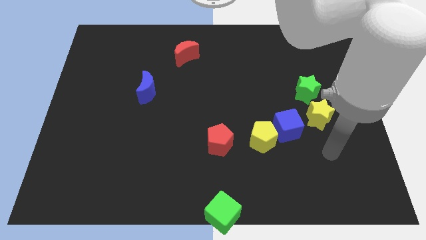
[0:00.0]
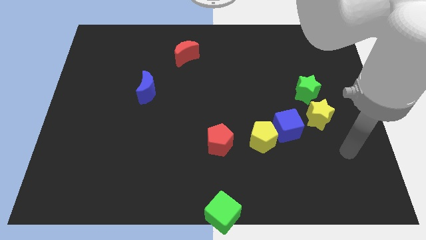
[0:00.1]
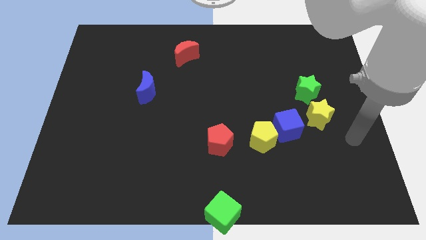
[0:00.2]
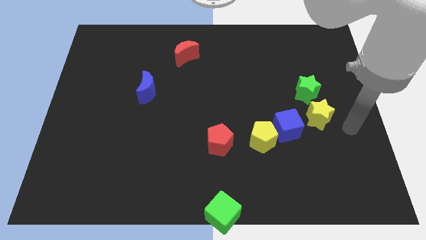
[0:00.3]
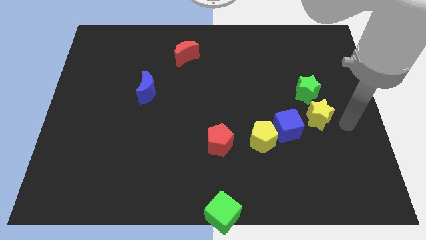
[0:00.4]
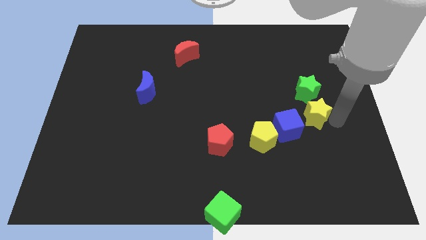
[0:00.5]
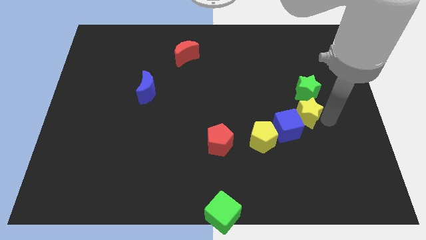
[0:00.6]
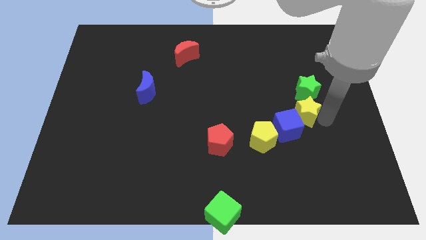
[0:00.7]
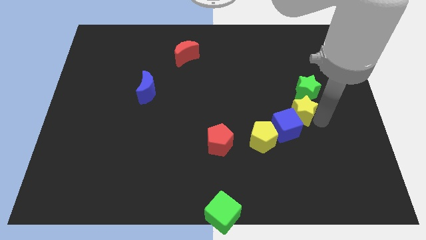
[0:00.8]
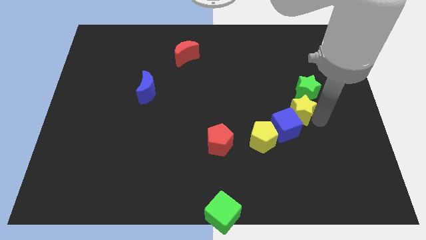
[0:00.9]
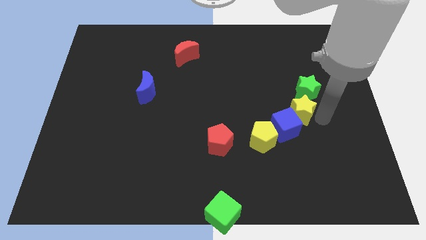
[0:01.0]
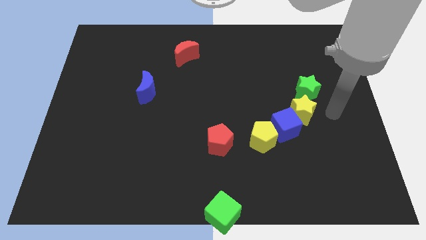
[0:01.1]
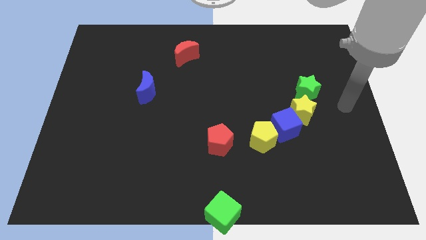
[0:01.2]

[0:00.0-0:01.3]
push the yellow star into the blue cube

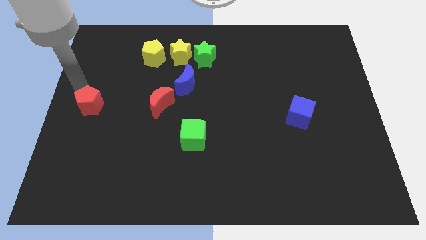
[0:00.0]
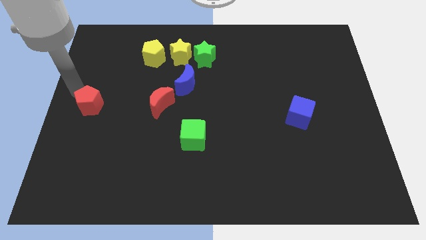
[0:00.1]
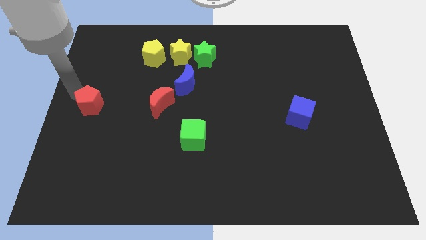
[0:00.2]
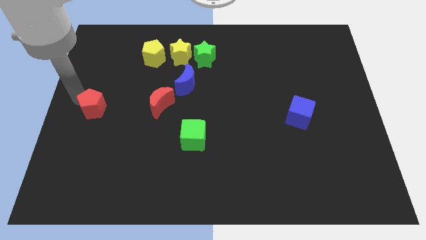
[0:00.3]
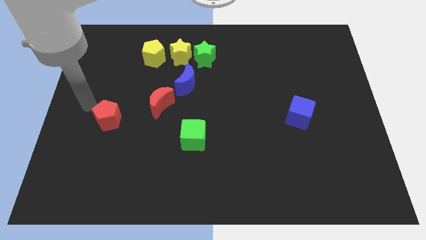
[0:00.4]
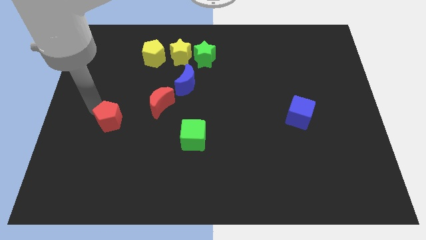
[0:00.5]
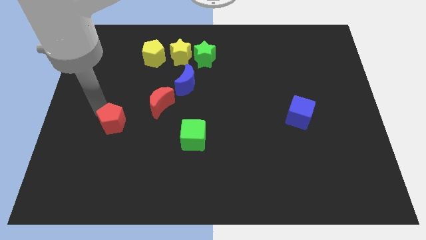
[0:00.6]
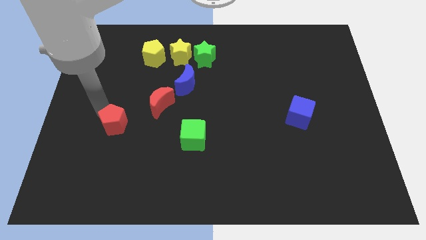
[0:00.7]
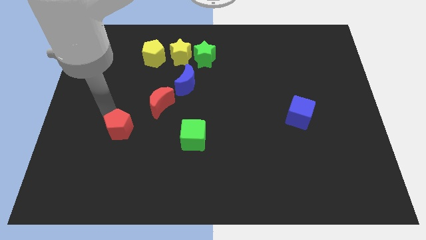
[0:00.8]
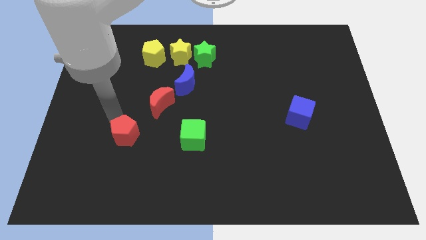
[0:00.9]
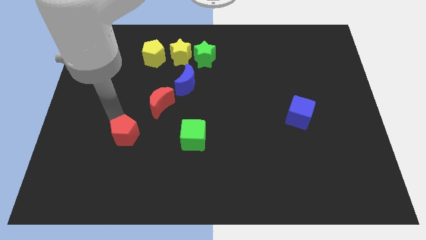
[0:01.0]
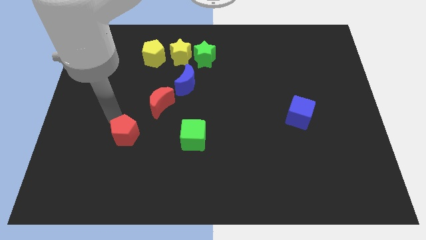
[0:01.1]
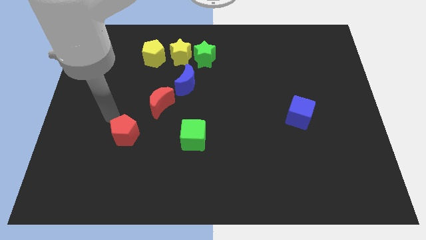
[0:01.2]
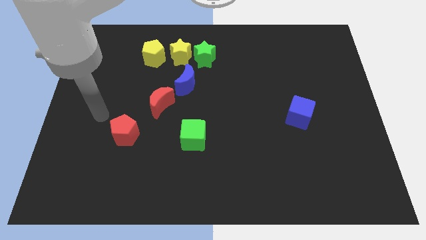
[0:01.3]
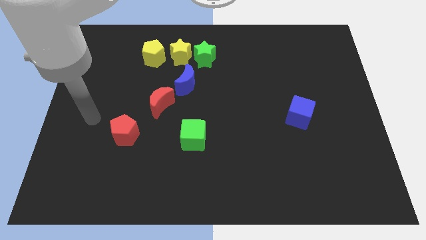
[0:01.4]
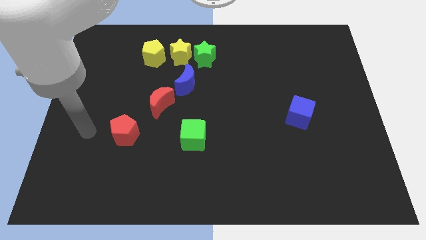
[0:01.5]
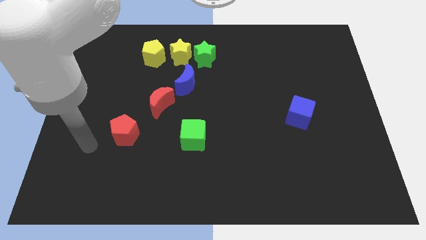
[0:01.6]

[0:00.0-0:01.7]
place the red pentagon to the left of the green cube

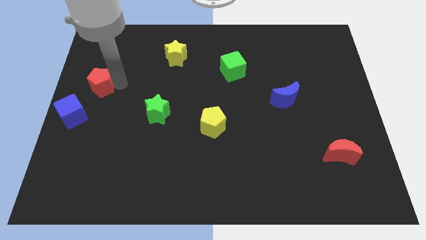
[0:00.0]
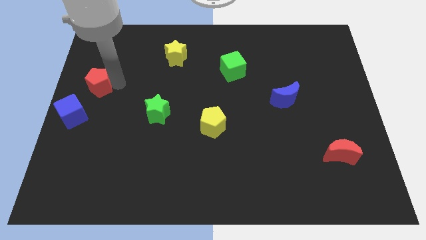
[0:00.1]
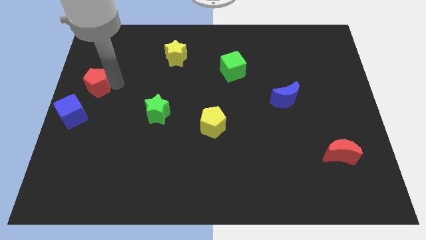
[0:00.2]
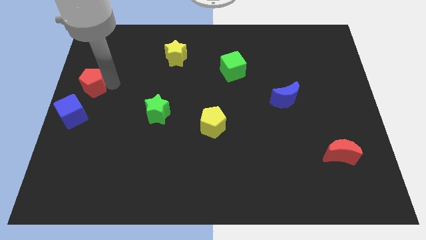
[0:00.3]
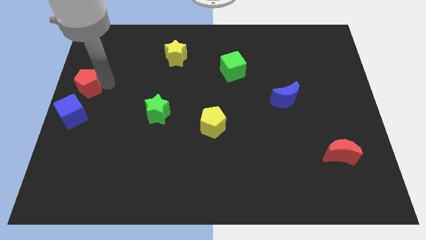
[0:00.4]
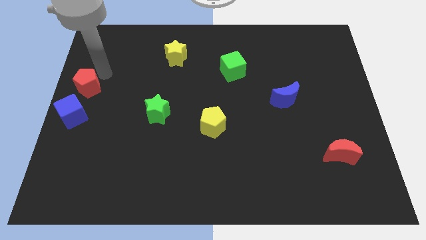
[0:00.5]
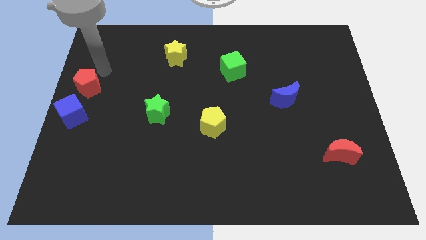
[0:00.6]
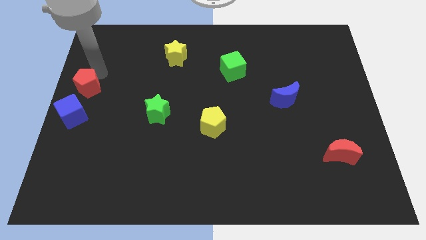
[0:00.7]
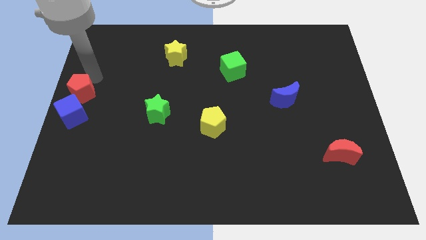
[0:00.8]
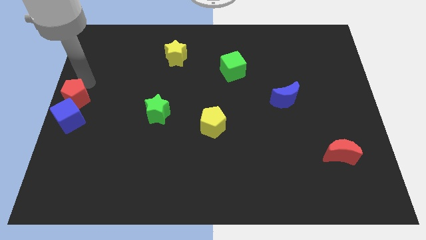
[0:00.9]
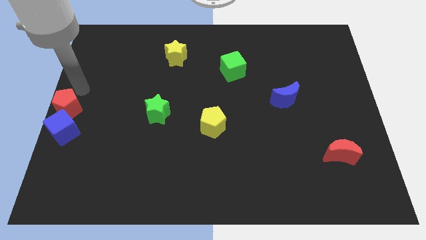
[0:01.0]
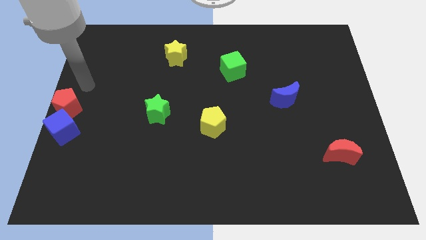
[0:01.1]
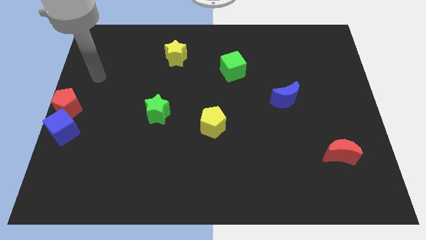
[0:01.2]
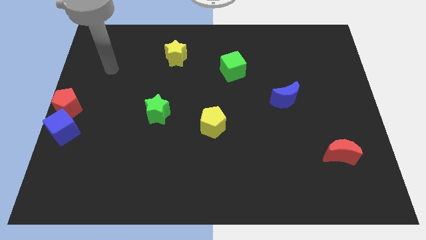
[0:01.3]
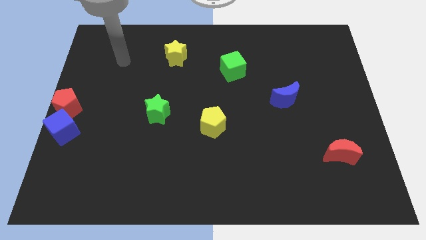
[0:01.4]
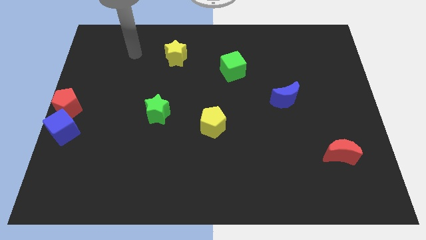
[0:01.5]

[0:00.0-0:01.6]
push the red pentagon into the blue cube

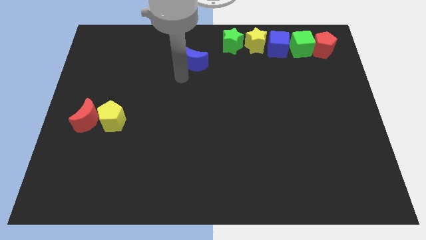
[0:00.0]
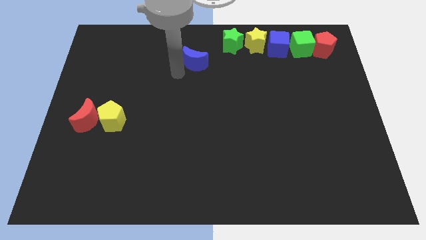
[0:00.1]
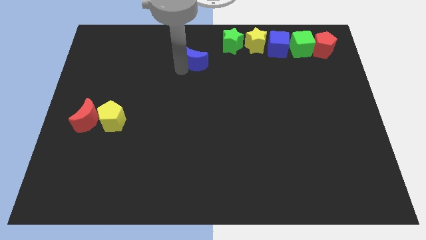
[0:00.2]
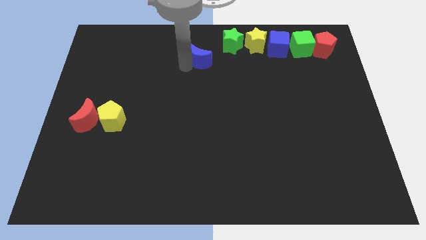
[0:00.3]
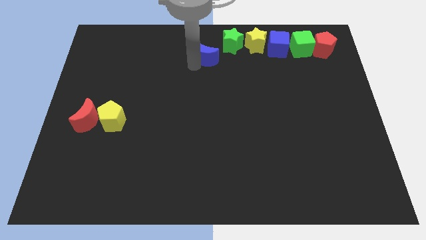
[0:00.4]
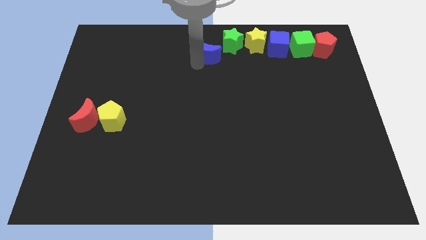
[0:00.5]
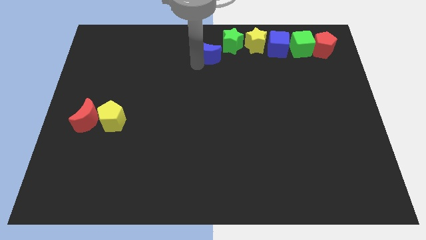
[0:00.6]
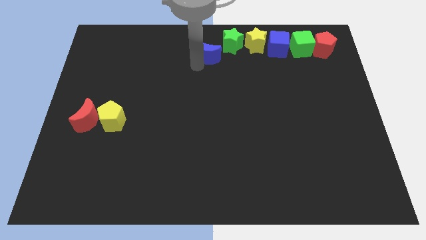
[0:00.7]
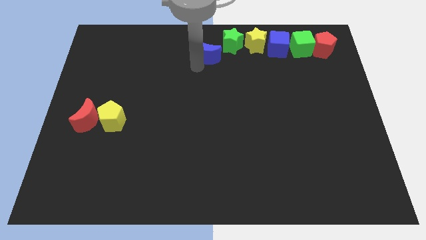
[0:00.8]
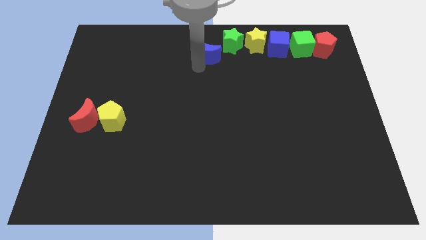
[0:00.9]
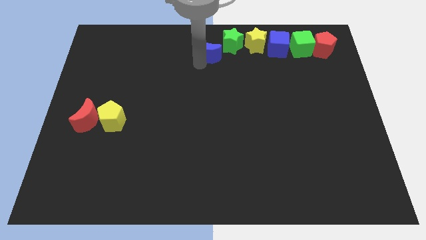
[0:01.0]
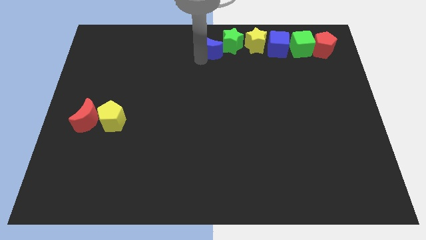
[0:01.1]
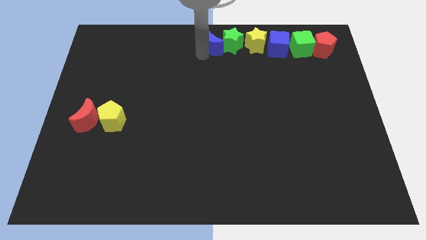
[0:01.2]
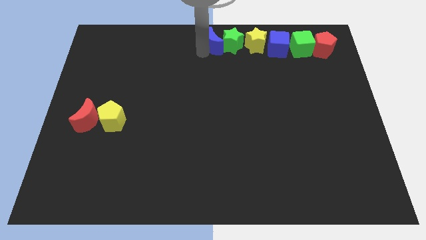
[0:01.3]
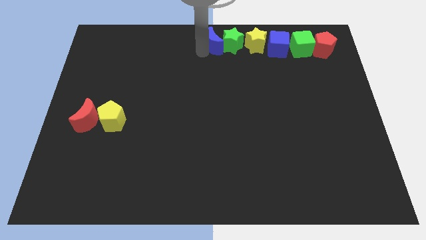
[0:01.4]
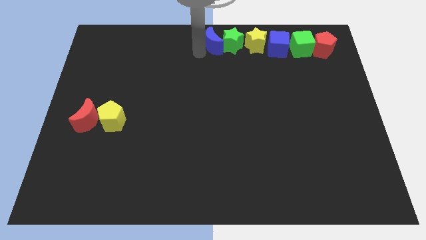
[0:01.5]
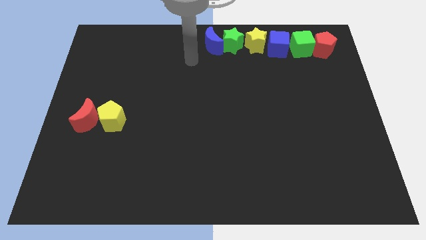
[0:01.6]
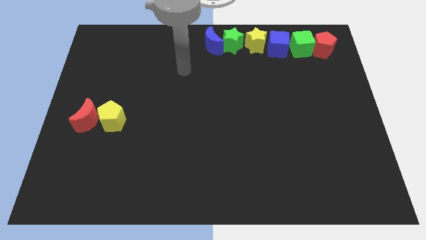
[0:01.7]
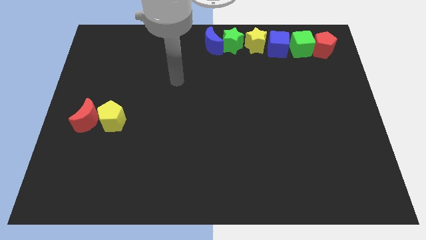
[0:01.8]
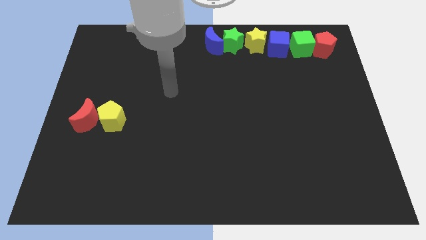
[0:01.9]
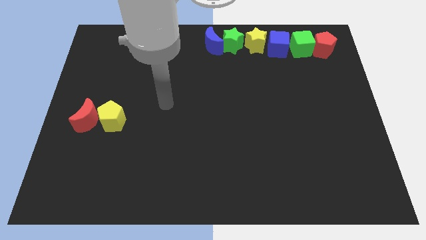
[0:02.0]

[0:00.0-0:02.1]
slide the blue crescent into the left side of the green star

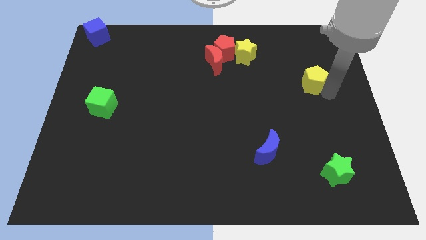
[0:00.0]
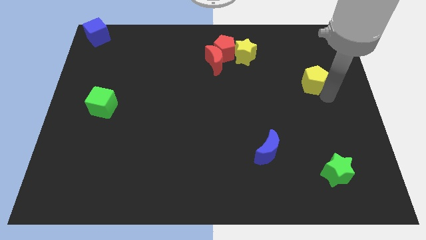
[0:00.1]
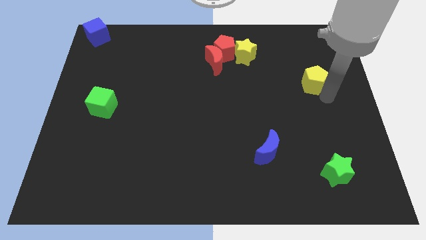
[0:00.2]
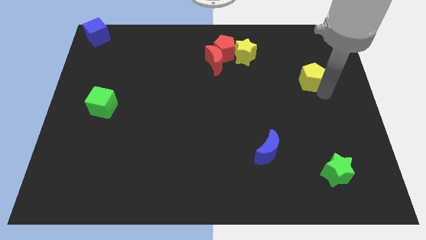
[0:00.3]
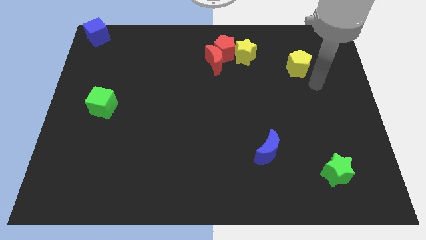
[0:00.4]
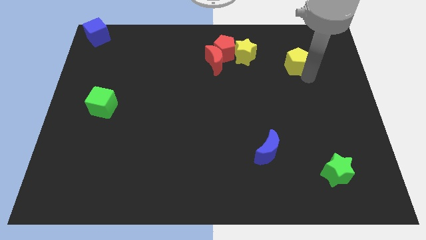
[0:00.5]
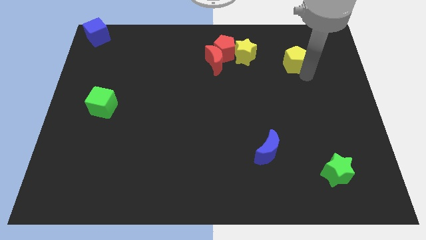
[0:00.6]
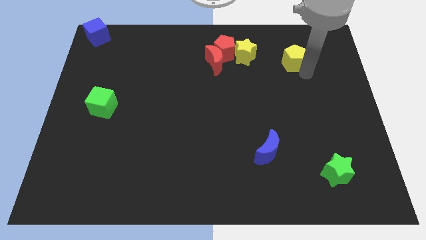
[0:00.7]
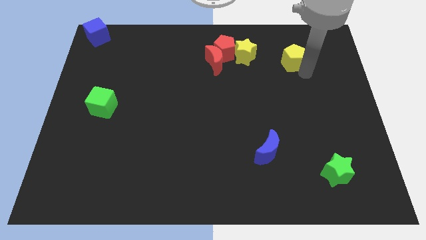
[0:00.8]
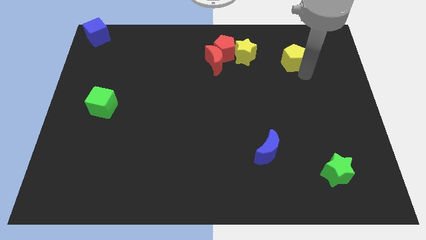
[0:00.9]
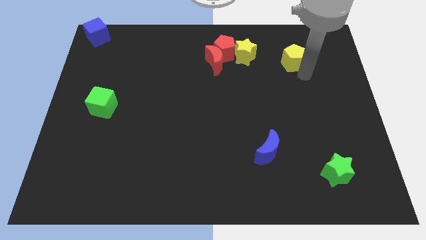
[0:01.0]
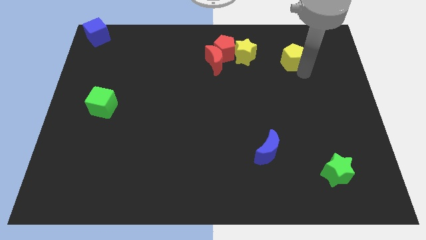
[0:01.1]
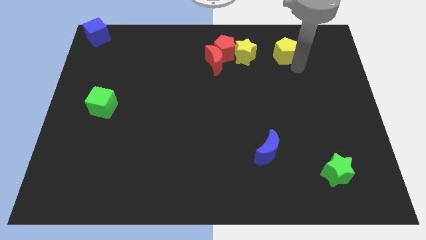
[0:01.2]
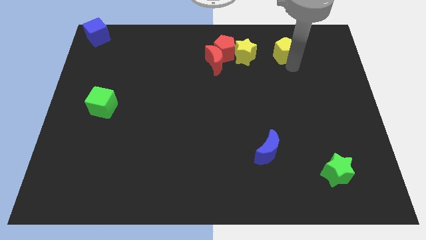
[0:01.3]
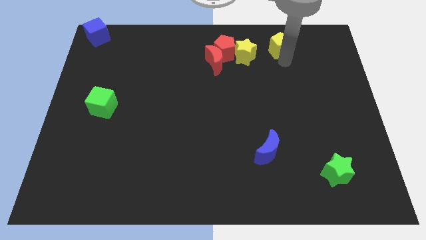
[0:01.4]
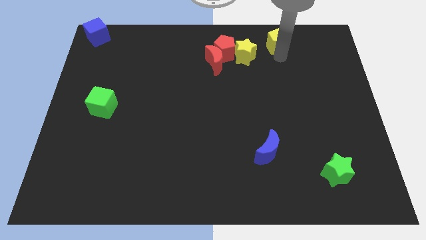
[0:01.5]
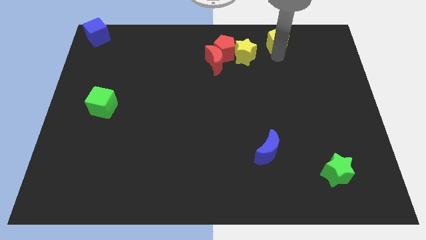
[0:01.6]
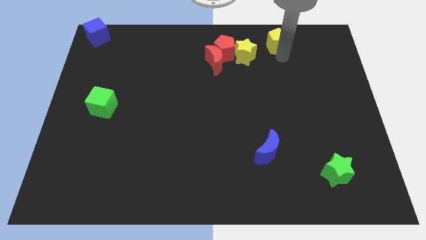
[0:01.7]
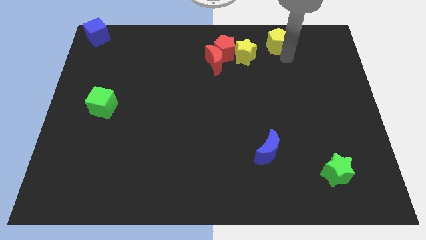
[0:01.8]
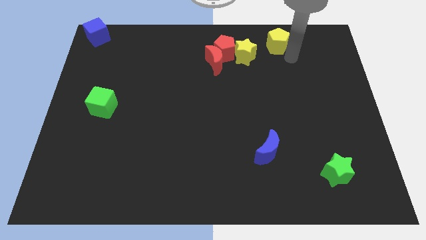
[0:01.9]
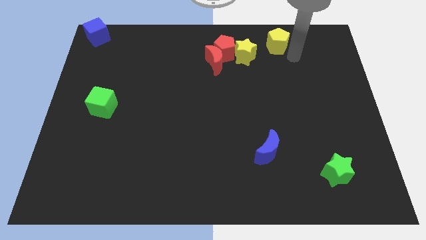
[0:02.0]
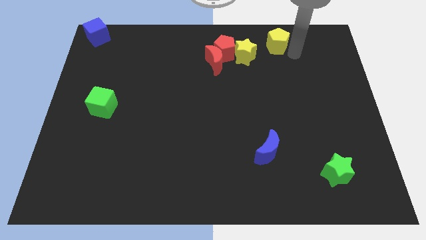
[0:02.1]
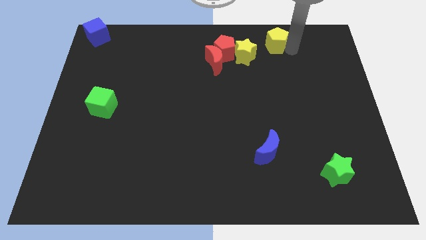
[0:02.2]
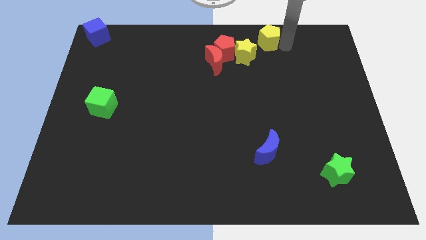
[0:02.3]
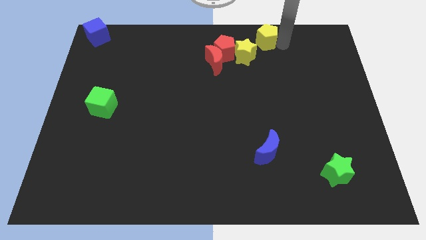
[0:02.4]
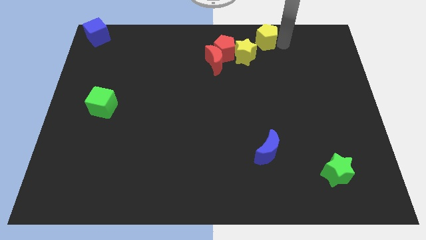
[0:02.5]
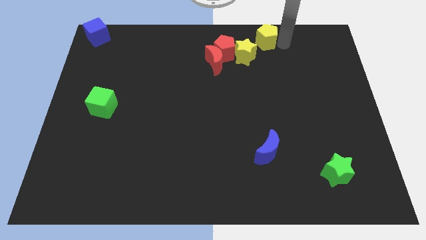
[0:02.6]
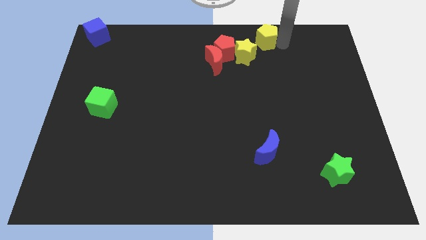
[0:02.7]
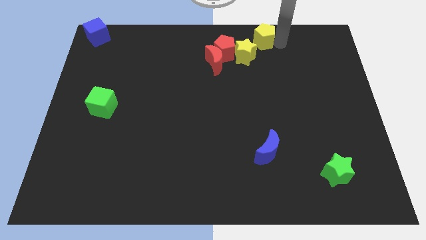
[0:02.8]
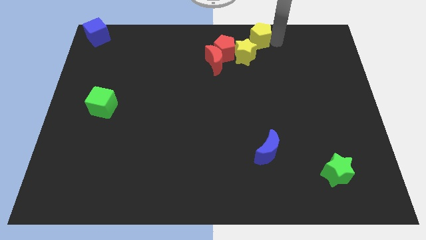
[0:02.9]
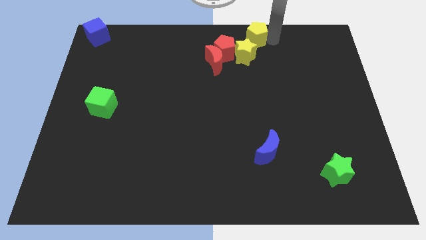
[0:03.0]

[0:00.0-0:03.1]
move the yellow pentagon at the top right of the yellow star
